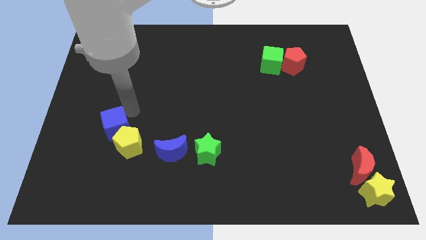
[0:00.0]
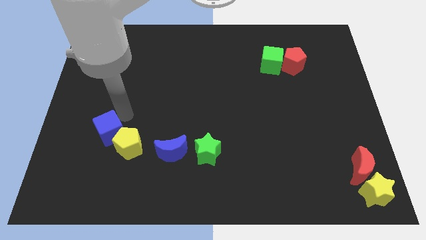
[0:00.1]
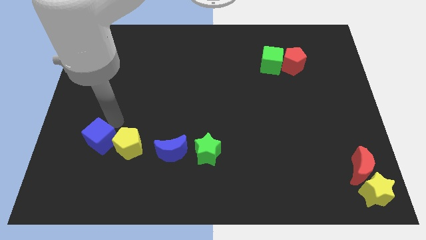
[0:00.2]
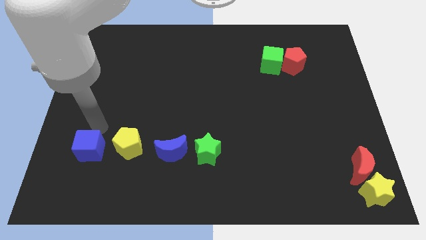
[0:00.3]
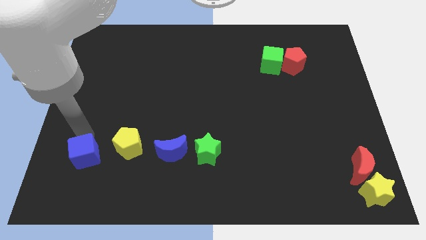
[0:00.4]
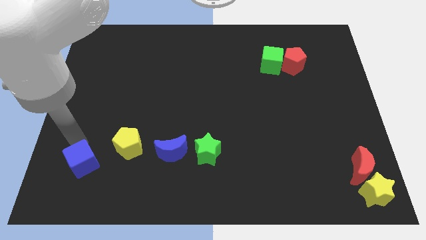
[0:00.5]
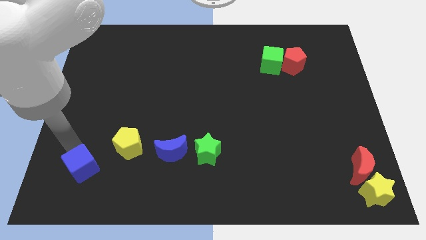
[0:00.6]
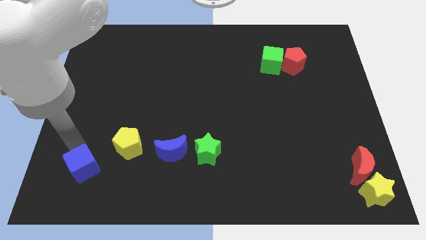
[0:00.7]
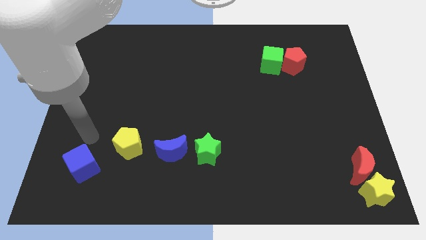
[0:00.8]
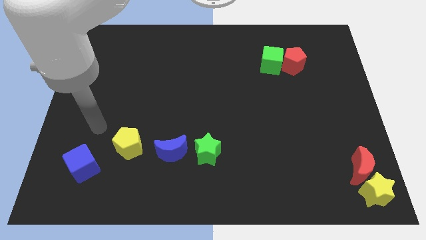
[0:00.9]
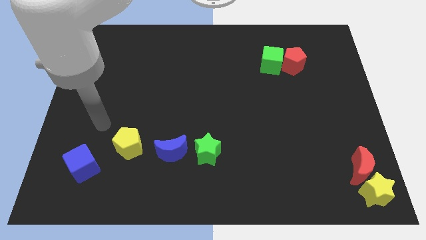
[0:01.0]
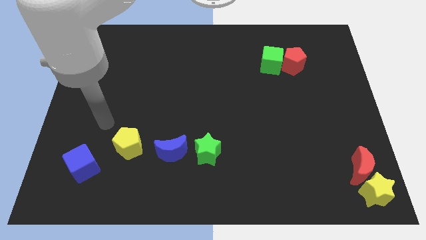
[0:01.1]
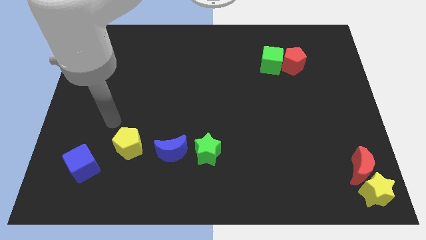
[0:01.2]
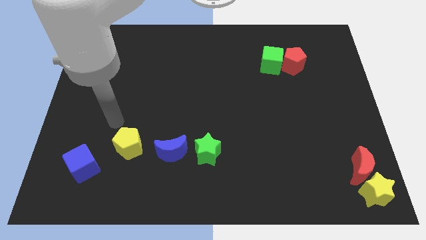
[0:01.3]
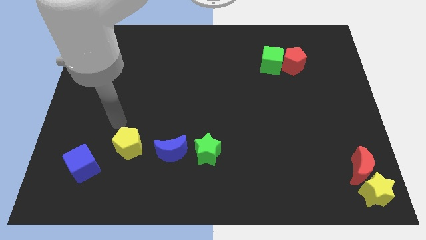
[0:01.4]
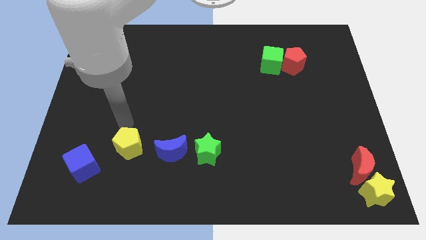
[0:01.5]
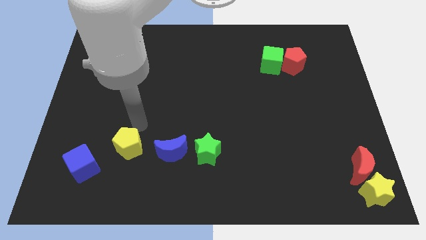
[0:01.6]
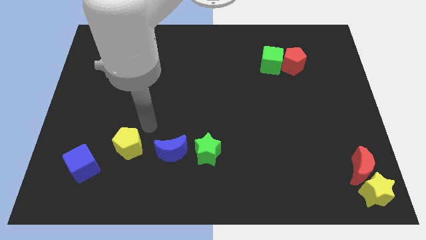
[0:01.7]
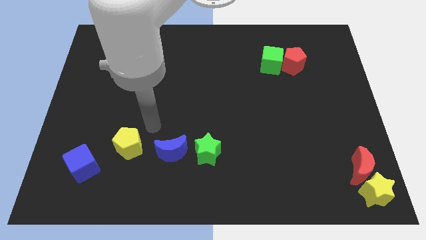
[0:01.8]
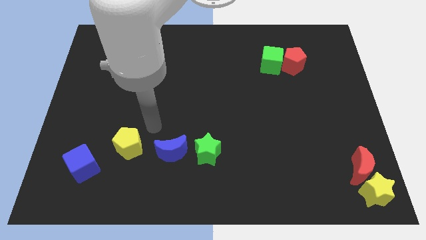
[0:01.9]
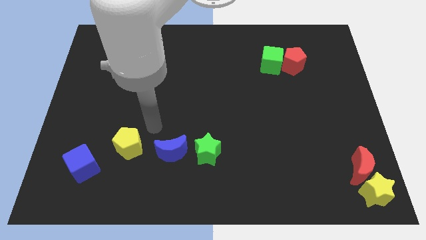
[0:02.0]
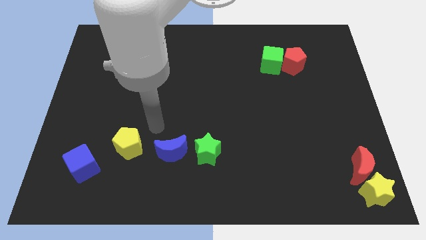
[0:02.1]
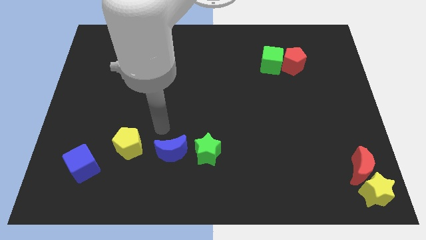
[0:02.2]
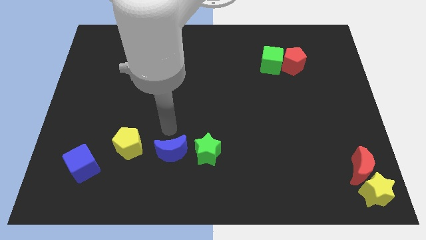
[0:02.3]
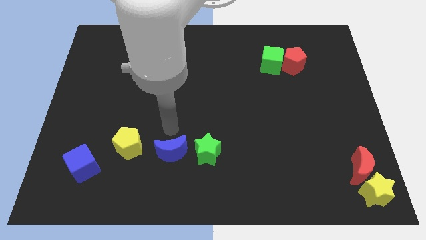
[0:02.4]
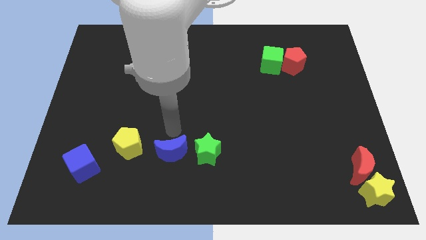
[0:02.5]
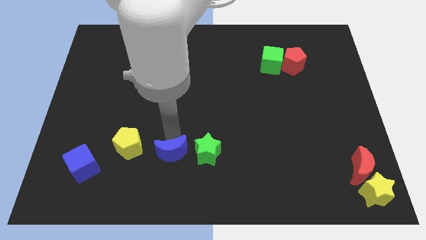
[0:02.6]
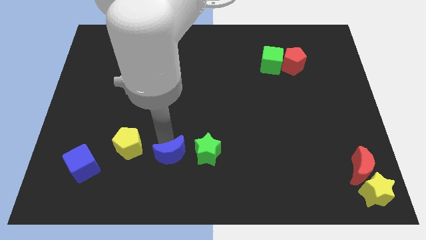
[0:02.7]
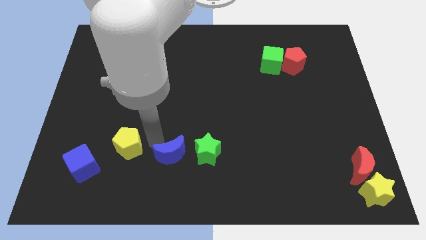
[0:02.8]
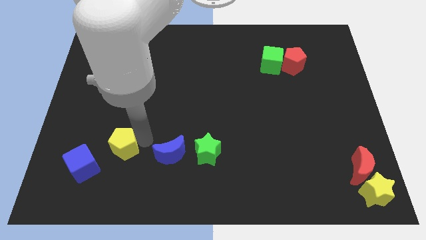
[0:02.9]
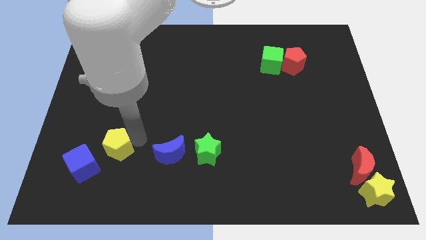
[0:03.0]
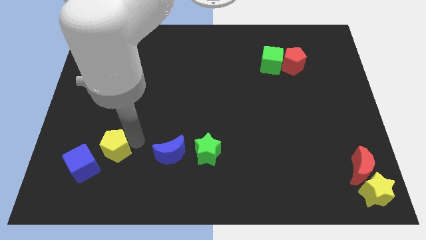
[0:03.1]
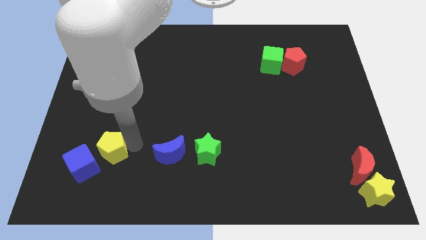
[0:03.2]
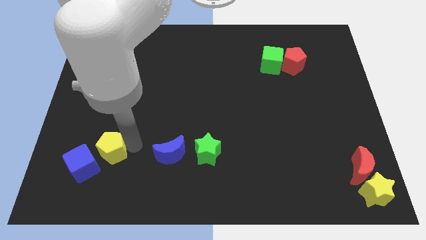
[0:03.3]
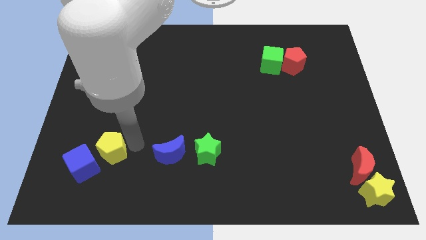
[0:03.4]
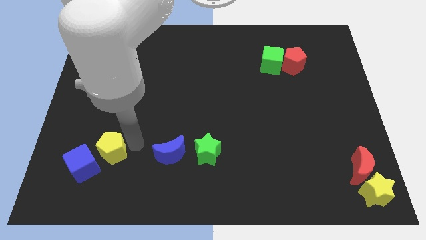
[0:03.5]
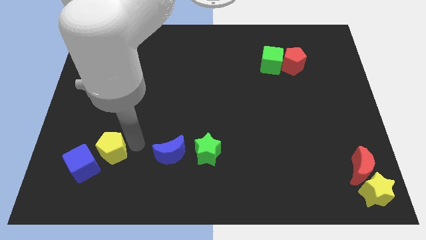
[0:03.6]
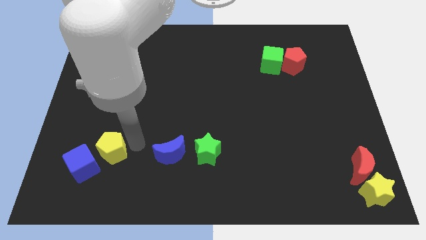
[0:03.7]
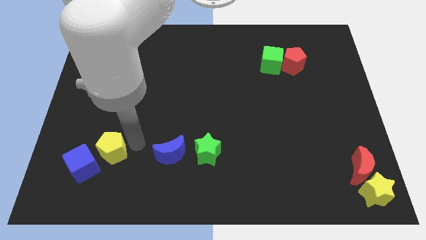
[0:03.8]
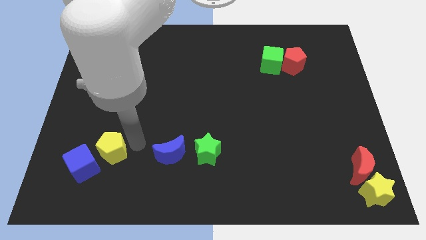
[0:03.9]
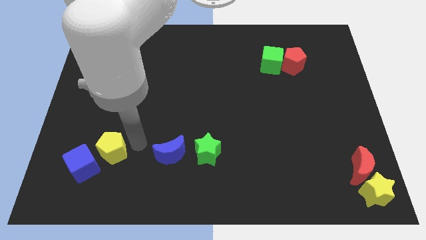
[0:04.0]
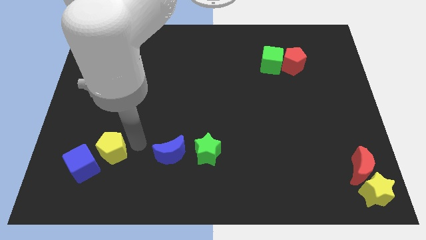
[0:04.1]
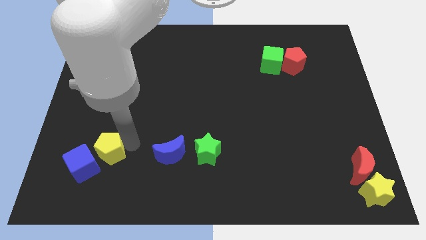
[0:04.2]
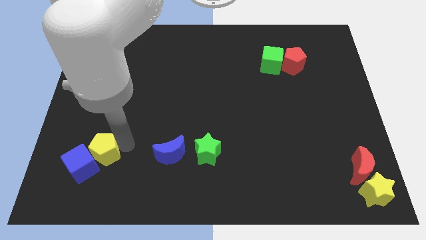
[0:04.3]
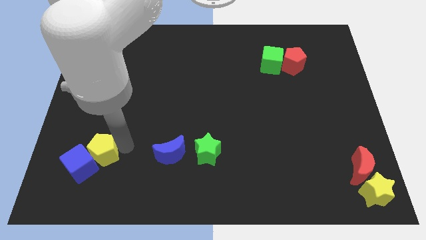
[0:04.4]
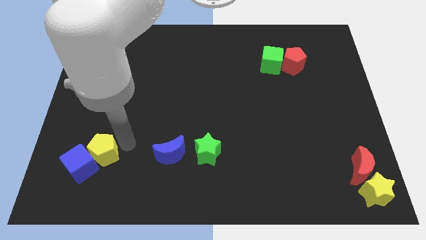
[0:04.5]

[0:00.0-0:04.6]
push the yellow pentagon diagonally towards the blue cube

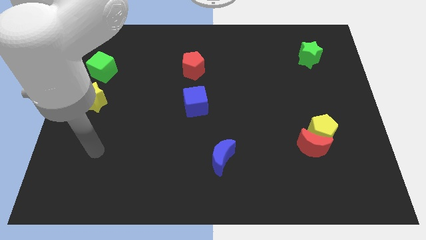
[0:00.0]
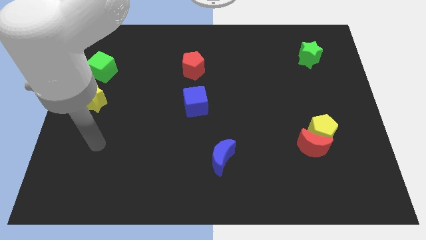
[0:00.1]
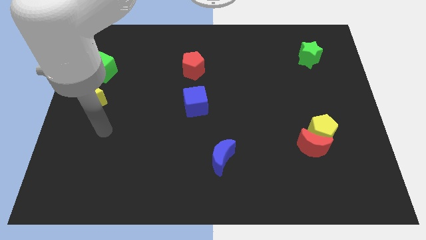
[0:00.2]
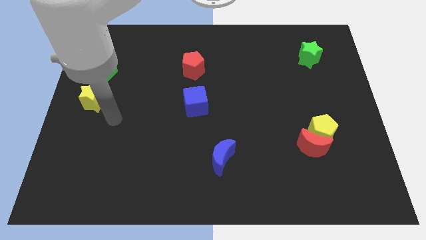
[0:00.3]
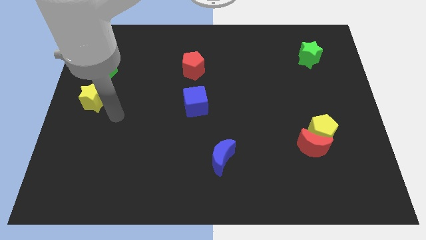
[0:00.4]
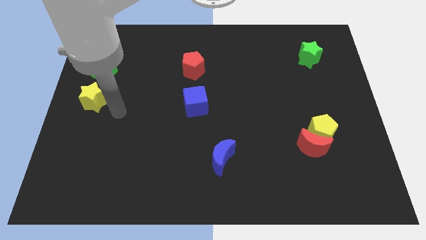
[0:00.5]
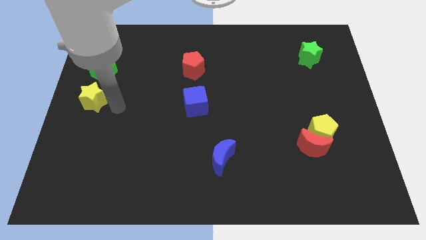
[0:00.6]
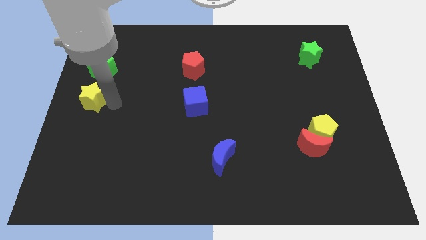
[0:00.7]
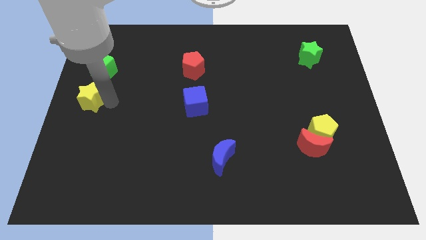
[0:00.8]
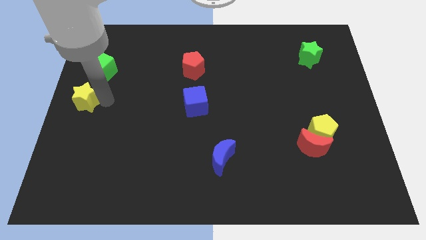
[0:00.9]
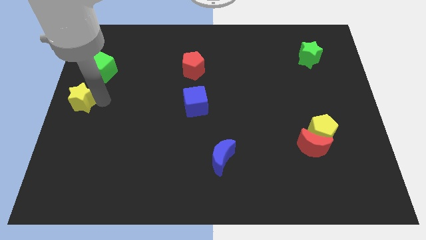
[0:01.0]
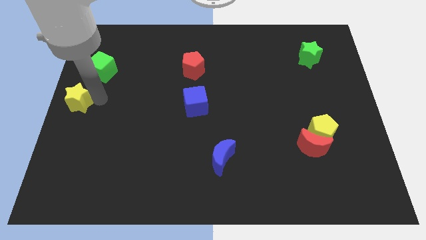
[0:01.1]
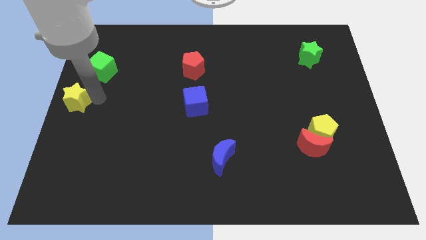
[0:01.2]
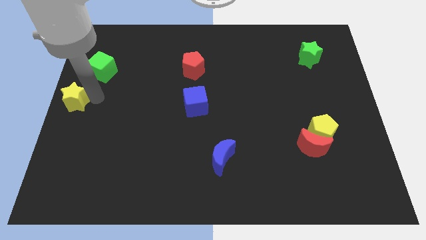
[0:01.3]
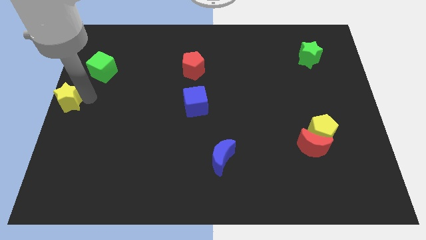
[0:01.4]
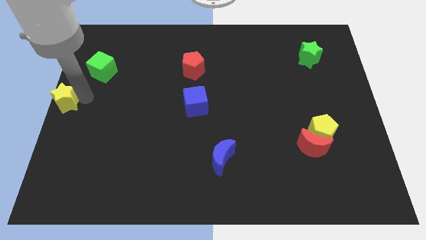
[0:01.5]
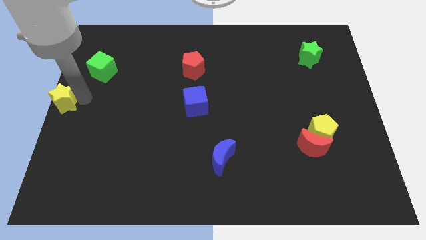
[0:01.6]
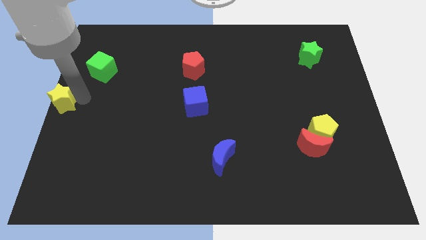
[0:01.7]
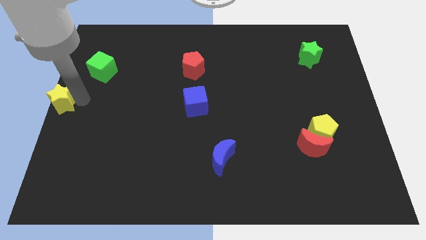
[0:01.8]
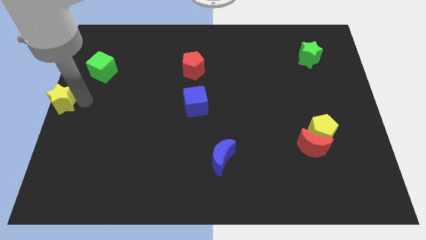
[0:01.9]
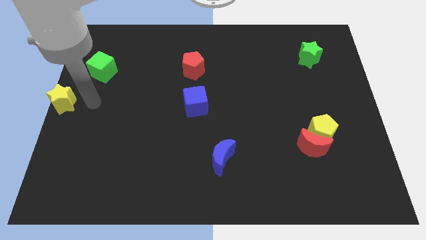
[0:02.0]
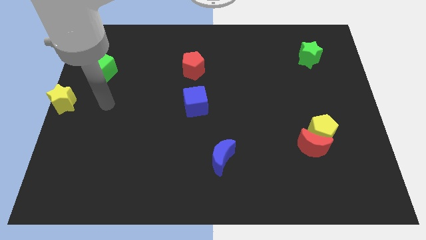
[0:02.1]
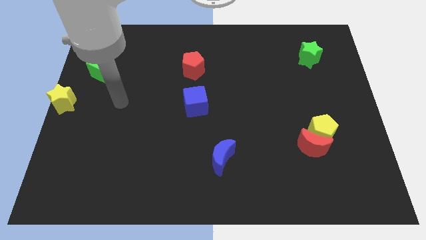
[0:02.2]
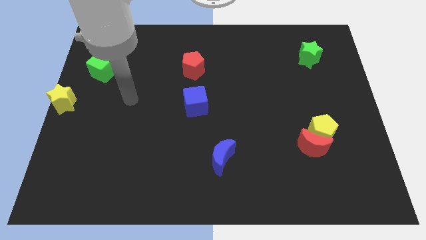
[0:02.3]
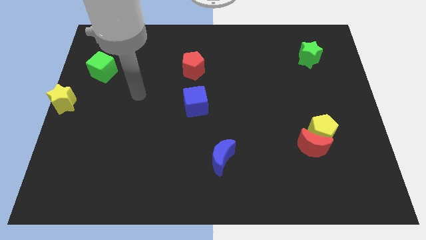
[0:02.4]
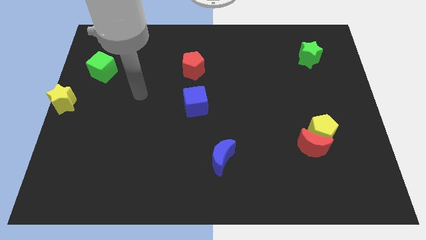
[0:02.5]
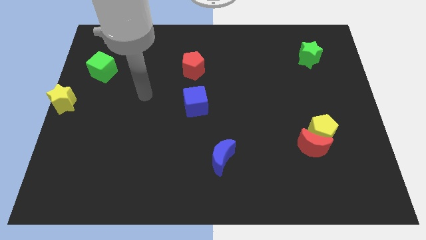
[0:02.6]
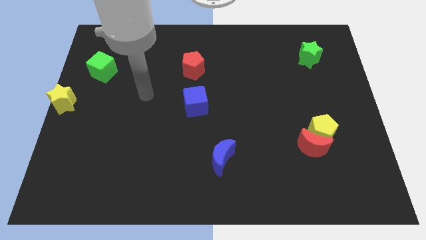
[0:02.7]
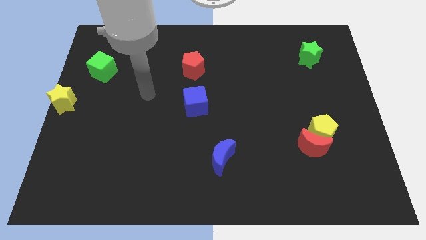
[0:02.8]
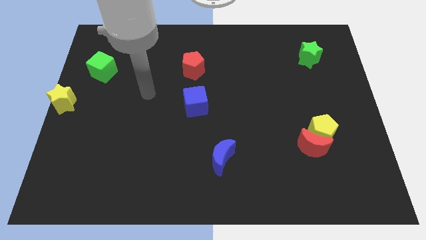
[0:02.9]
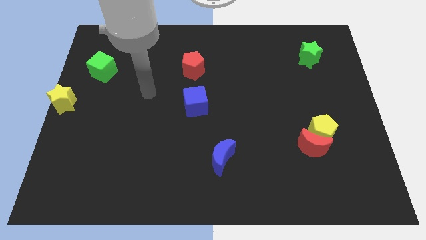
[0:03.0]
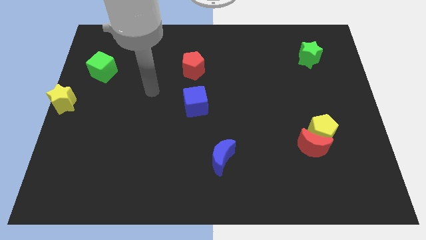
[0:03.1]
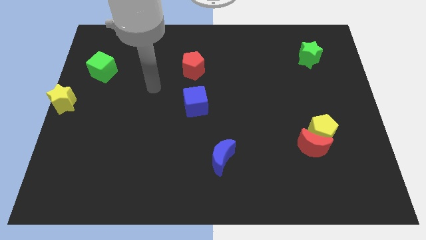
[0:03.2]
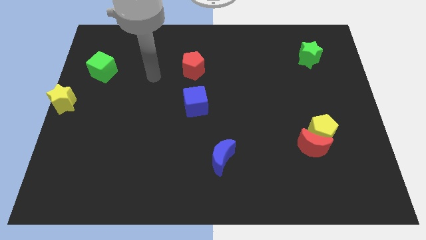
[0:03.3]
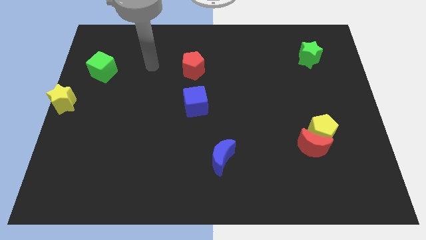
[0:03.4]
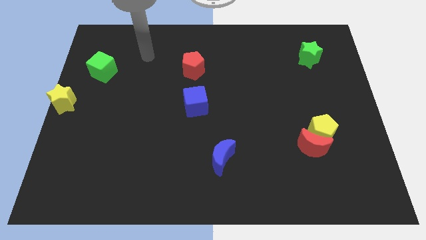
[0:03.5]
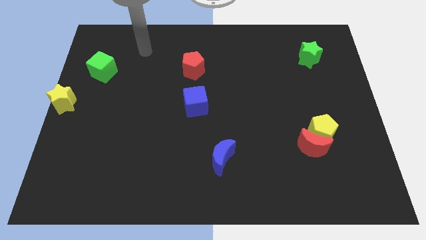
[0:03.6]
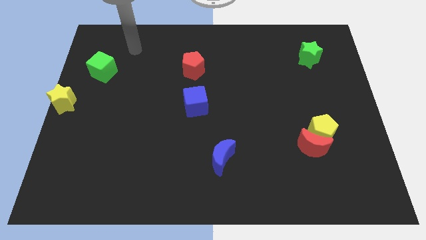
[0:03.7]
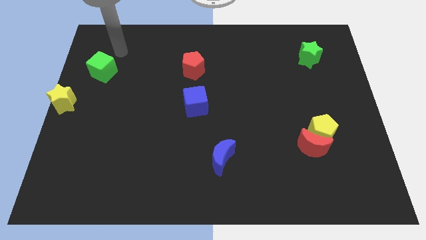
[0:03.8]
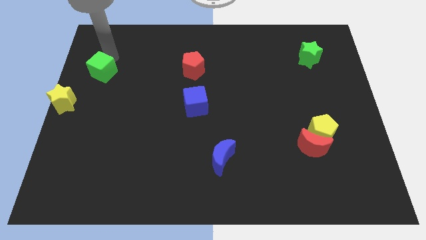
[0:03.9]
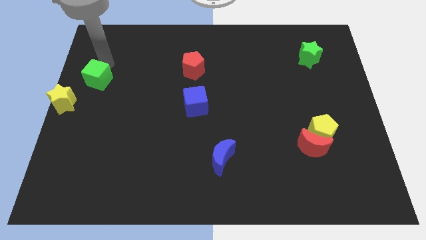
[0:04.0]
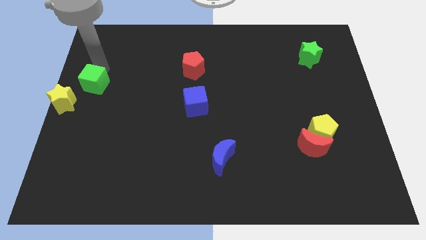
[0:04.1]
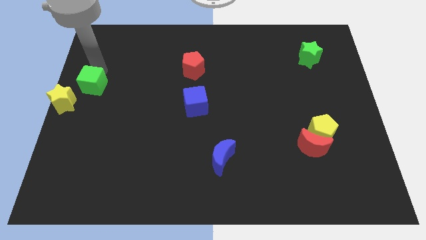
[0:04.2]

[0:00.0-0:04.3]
push the yellow star towards the left center side of the board

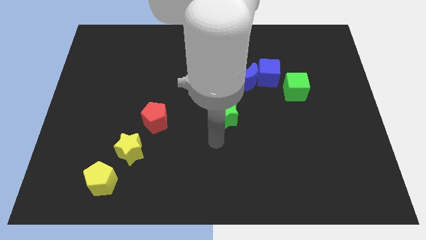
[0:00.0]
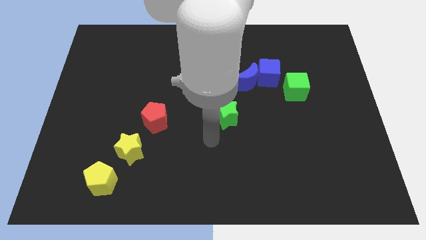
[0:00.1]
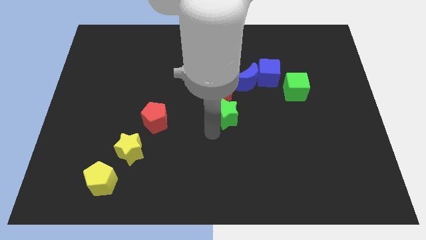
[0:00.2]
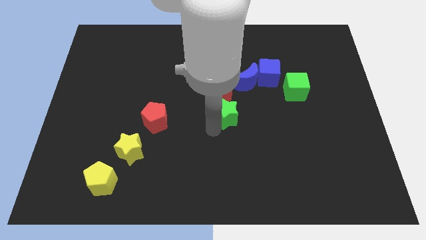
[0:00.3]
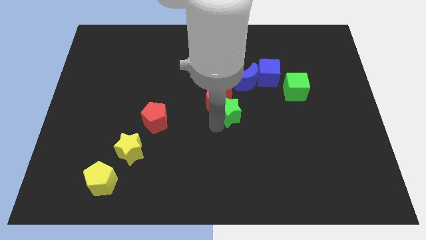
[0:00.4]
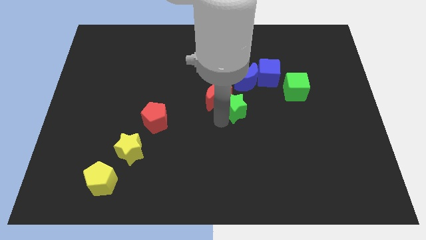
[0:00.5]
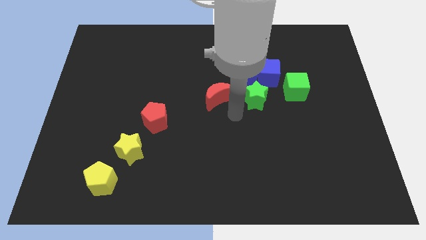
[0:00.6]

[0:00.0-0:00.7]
place green star below blue crescent
